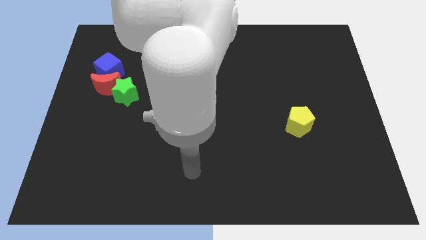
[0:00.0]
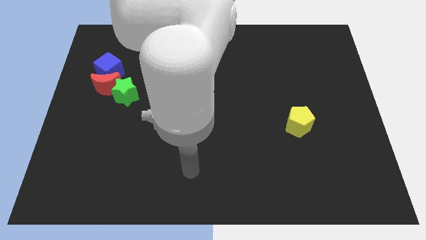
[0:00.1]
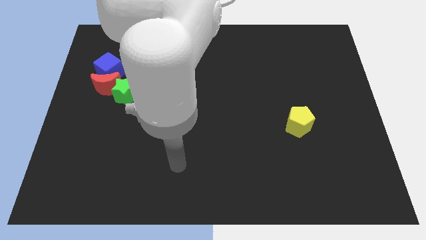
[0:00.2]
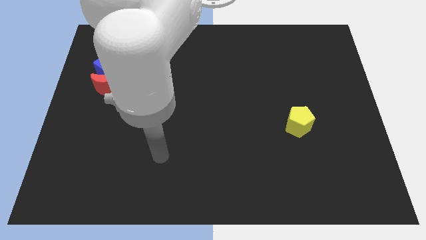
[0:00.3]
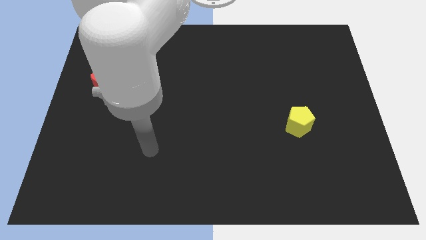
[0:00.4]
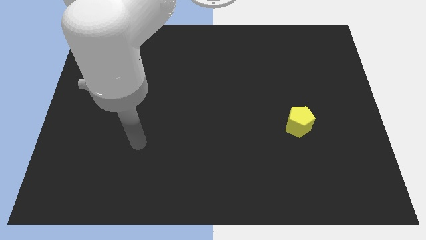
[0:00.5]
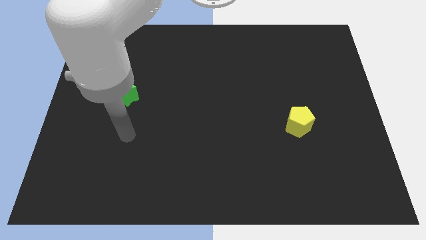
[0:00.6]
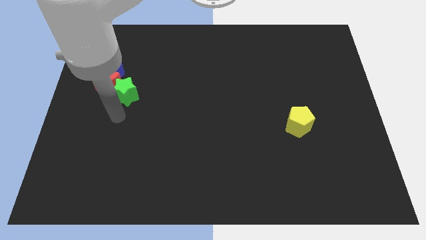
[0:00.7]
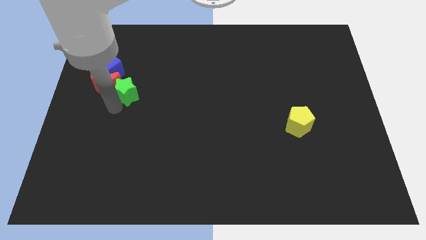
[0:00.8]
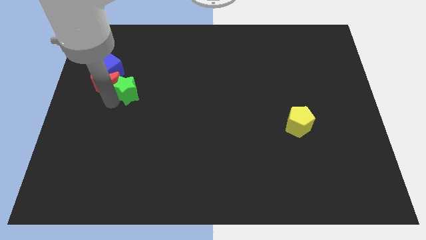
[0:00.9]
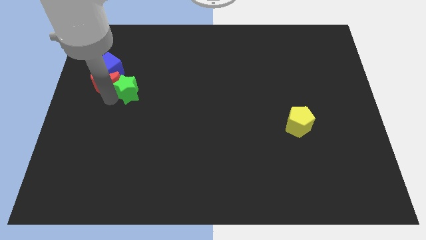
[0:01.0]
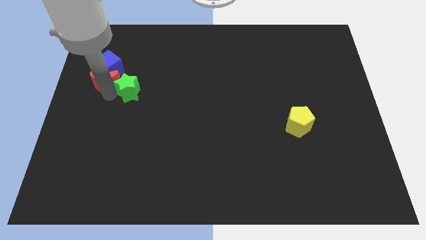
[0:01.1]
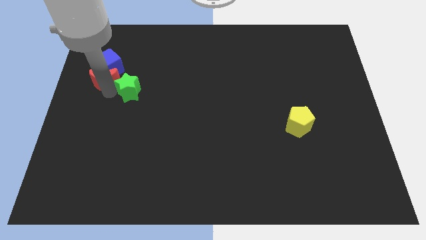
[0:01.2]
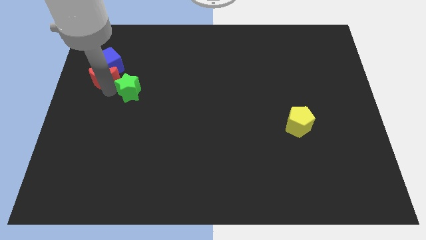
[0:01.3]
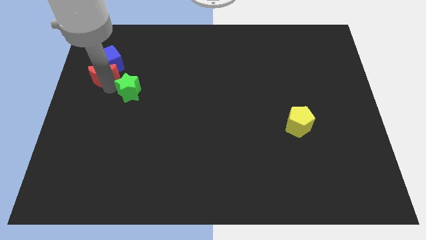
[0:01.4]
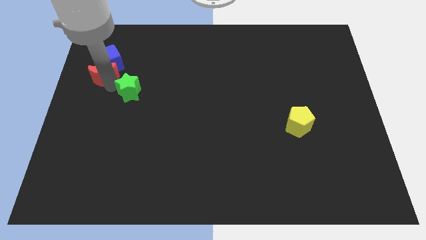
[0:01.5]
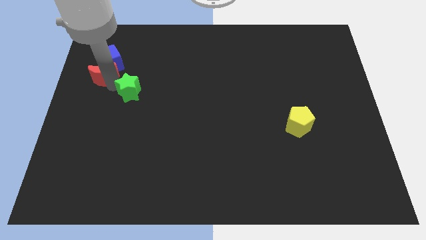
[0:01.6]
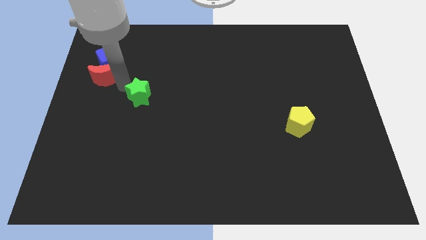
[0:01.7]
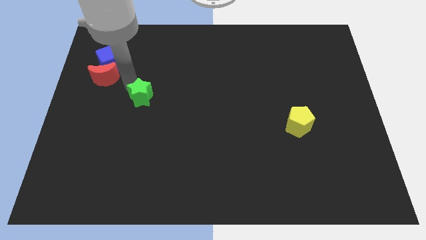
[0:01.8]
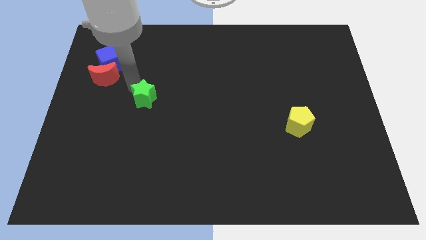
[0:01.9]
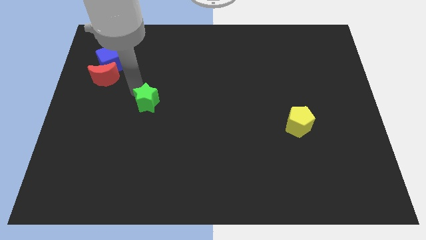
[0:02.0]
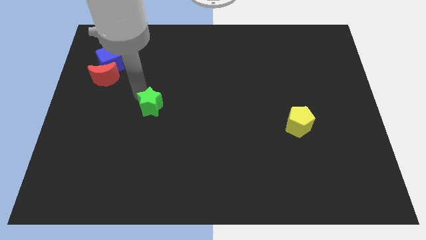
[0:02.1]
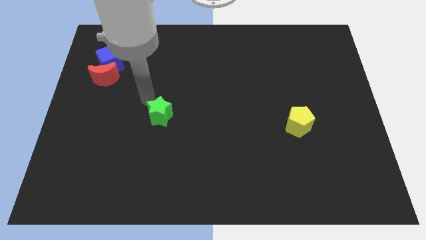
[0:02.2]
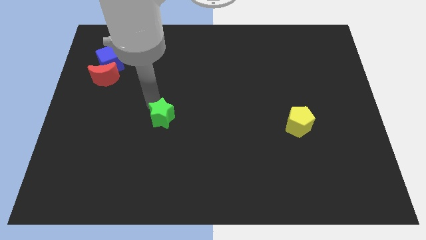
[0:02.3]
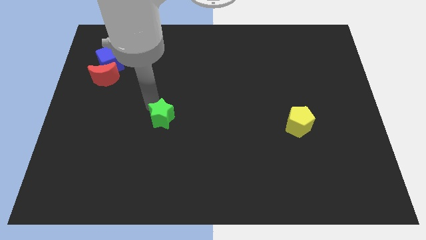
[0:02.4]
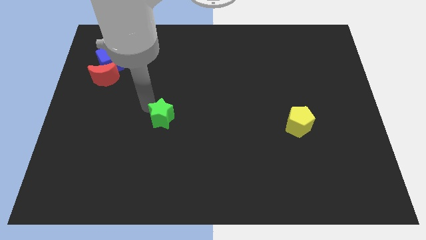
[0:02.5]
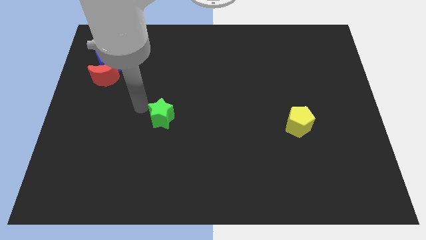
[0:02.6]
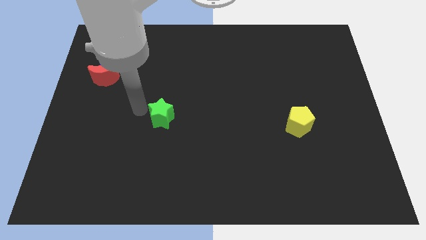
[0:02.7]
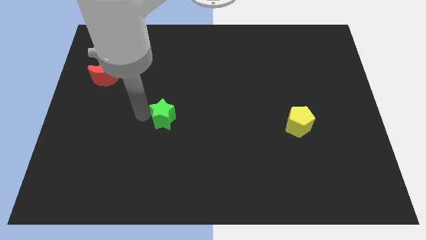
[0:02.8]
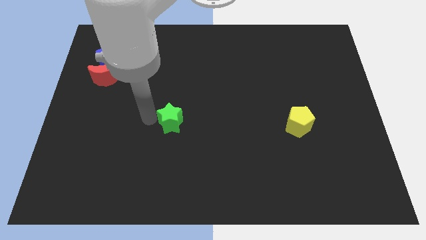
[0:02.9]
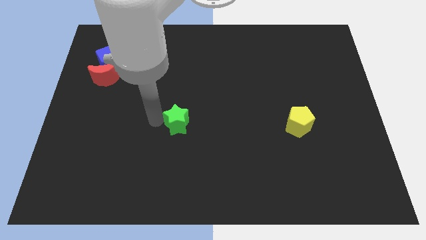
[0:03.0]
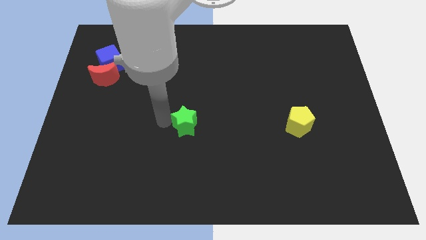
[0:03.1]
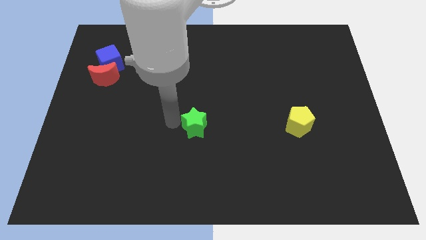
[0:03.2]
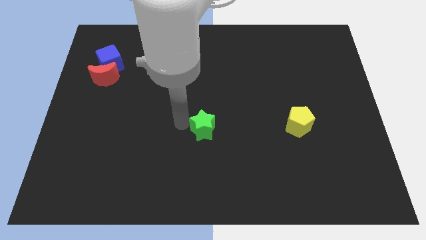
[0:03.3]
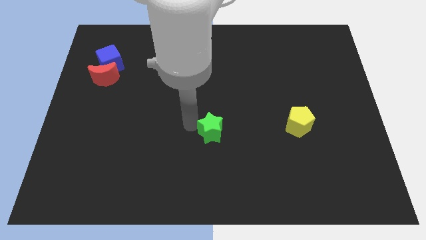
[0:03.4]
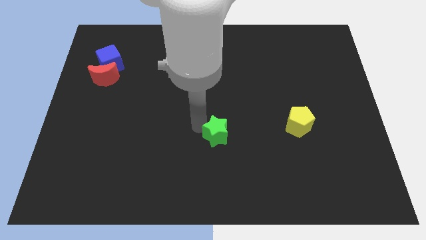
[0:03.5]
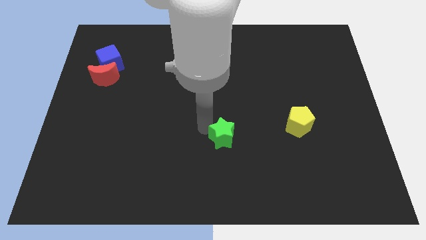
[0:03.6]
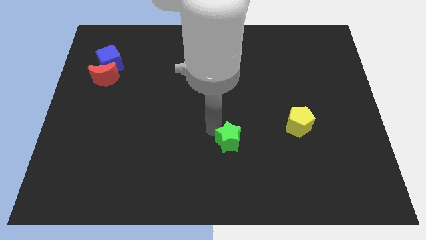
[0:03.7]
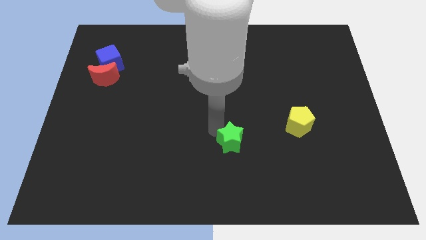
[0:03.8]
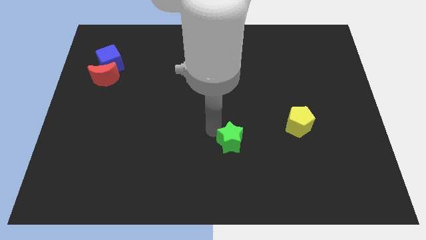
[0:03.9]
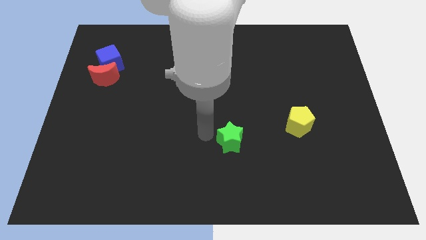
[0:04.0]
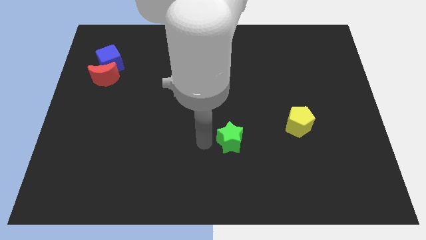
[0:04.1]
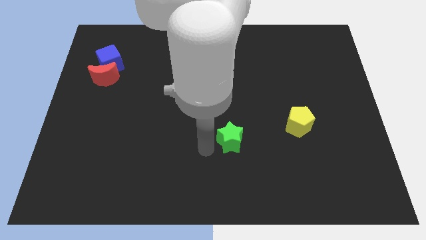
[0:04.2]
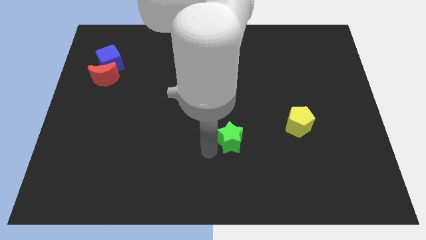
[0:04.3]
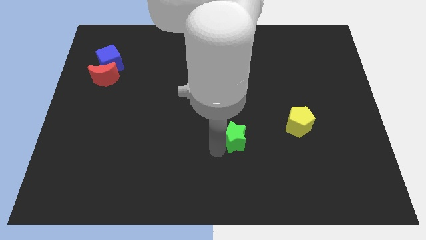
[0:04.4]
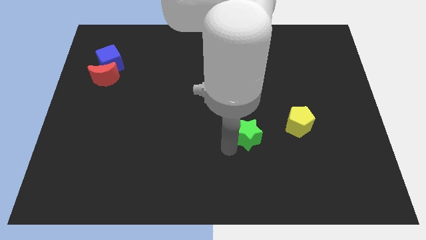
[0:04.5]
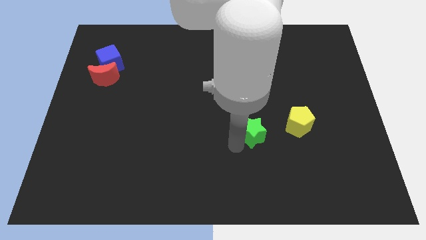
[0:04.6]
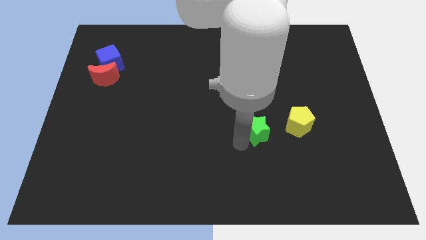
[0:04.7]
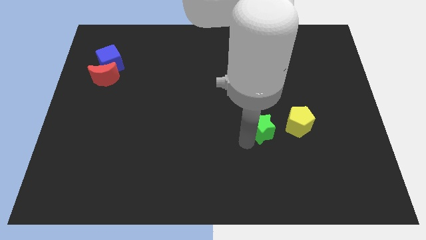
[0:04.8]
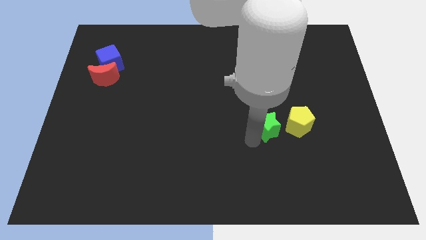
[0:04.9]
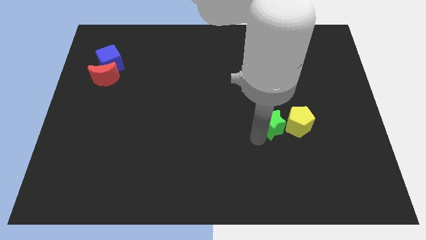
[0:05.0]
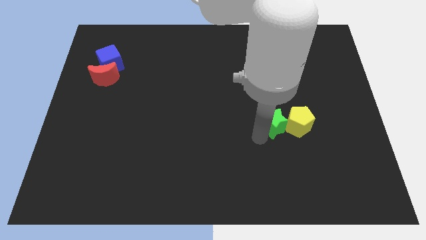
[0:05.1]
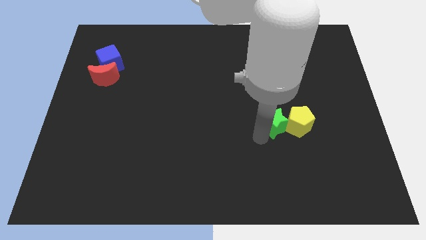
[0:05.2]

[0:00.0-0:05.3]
move the star next to the yellow block

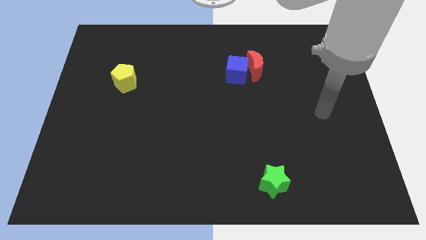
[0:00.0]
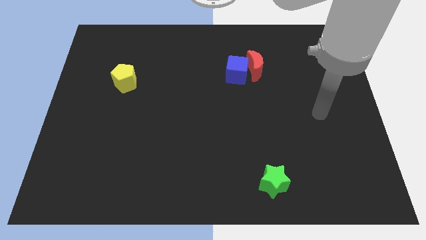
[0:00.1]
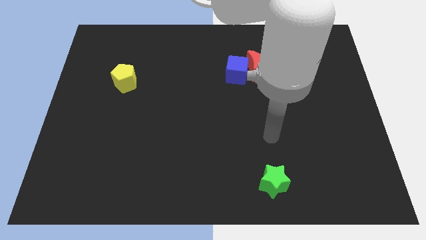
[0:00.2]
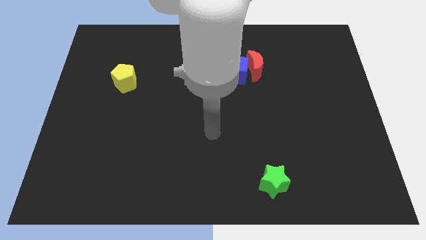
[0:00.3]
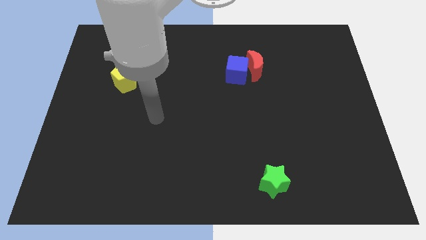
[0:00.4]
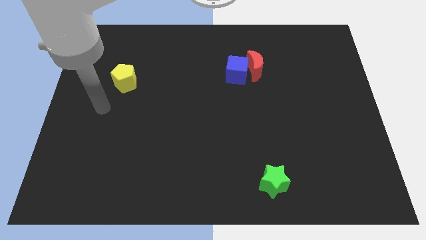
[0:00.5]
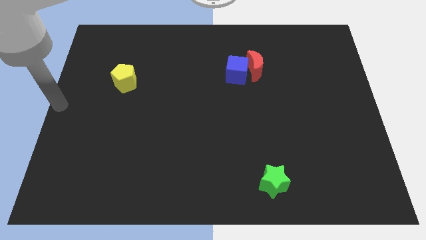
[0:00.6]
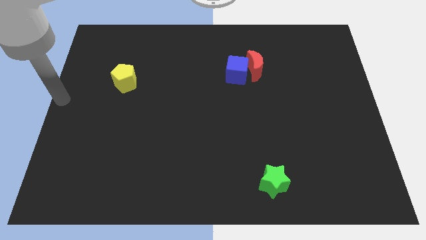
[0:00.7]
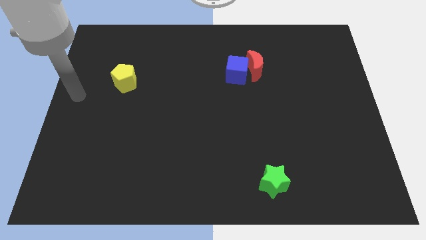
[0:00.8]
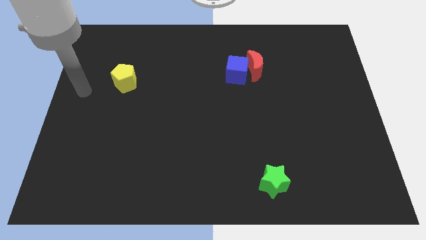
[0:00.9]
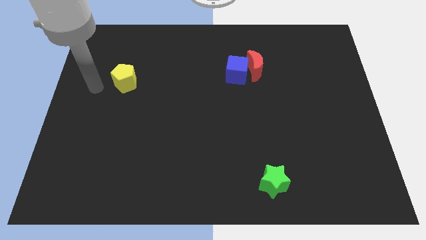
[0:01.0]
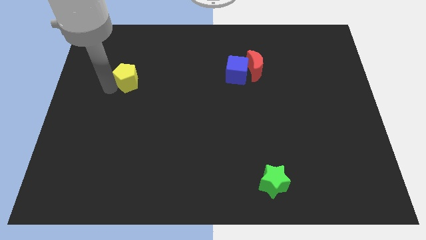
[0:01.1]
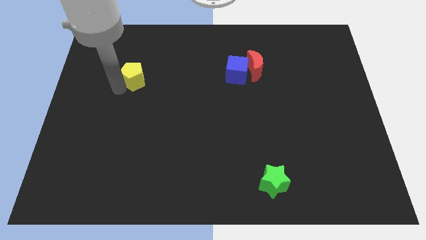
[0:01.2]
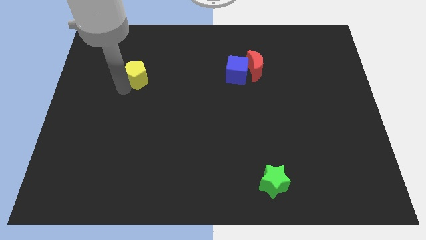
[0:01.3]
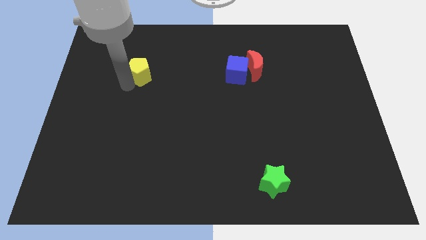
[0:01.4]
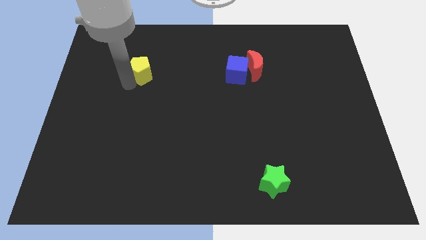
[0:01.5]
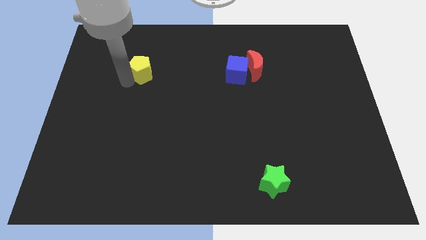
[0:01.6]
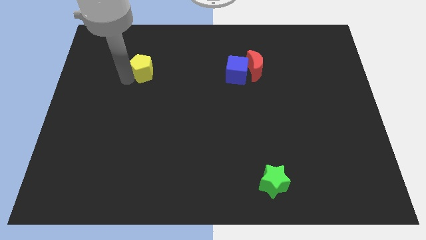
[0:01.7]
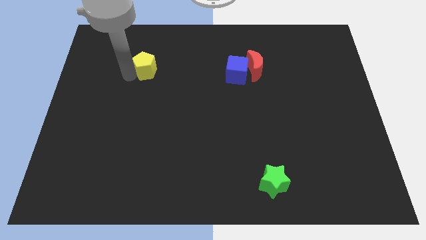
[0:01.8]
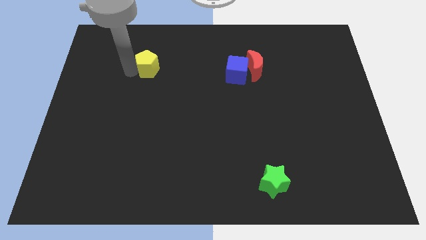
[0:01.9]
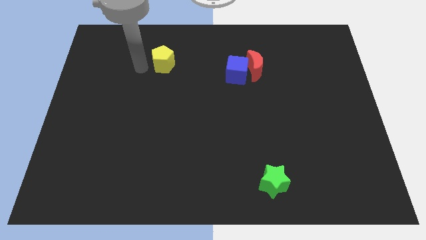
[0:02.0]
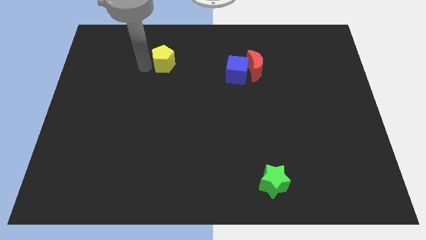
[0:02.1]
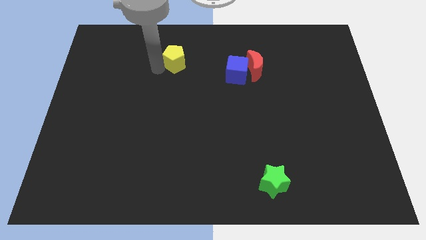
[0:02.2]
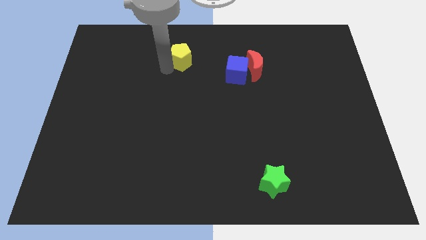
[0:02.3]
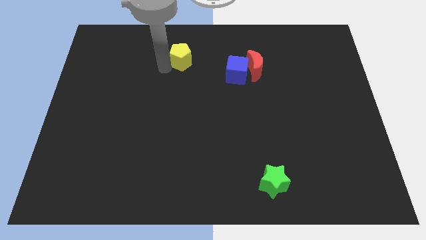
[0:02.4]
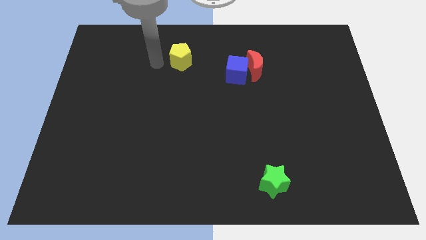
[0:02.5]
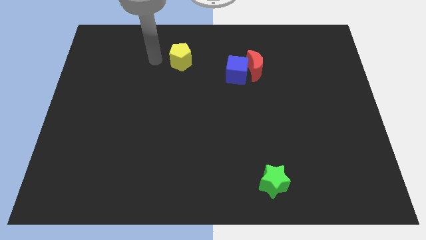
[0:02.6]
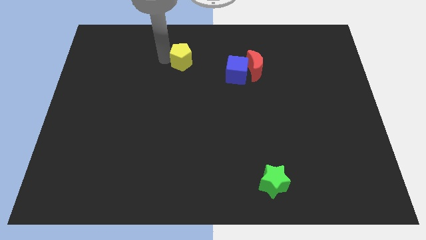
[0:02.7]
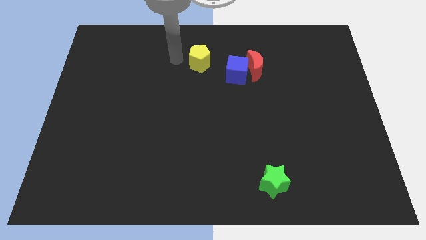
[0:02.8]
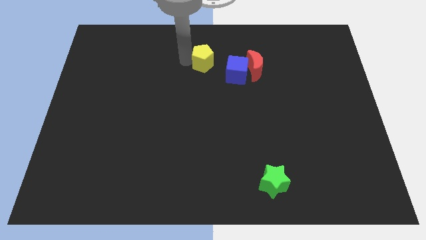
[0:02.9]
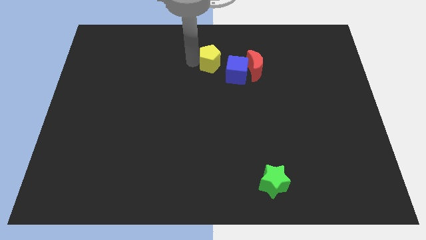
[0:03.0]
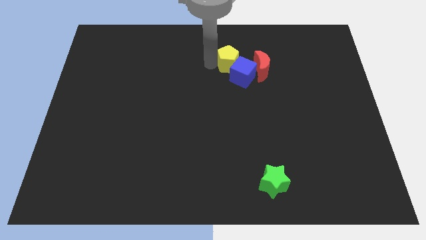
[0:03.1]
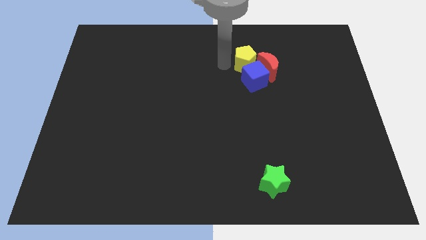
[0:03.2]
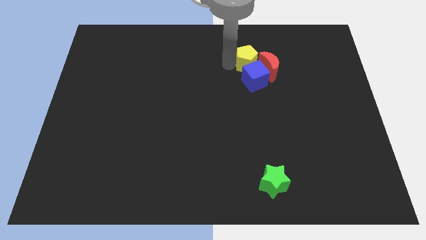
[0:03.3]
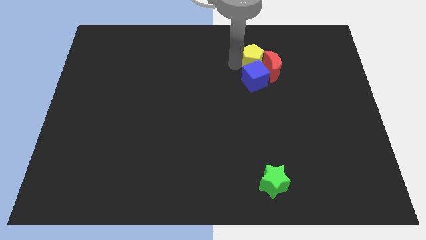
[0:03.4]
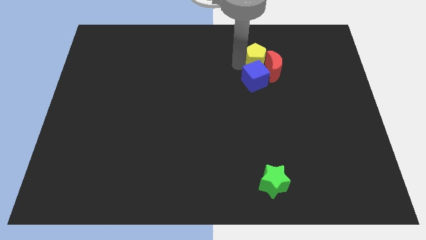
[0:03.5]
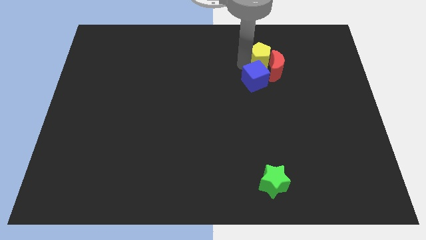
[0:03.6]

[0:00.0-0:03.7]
put the pentagon next to the red moon
